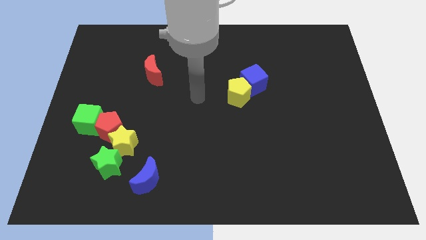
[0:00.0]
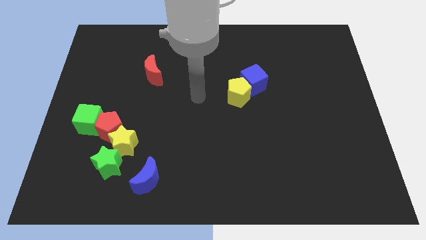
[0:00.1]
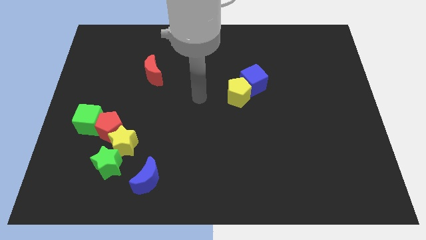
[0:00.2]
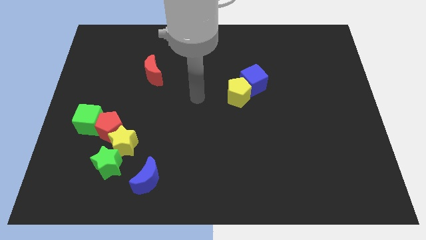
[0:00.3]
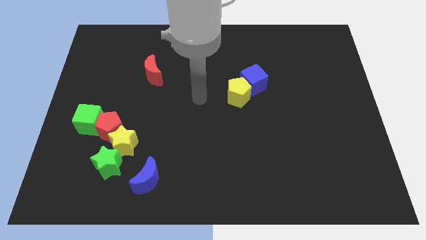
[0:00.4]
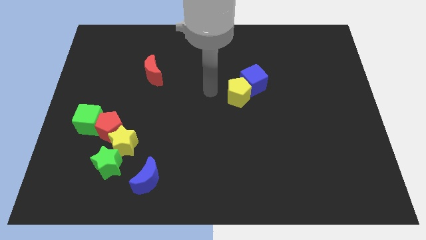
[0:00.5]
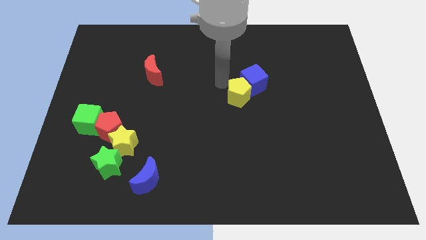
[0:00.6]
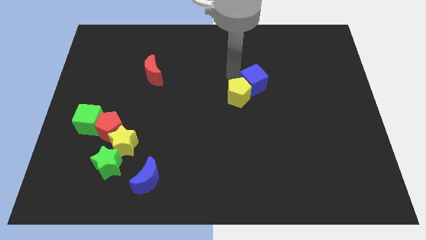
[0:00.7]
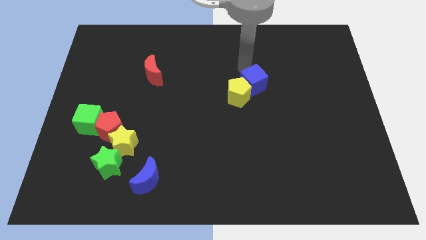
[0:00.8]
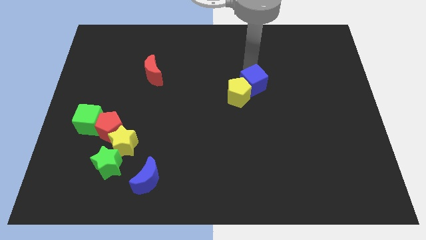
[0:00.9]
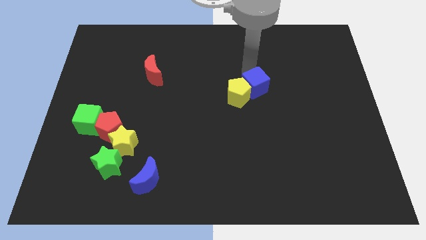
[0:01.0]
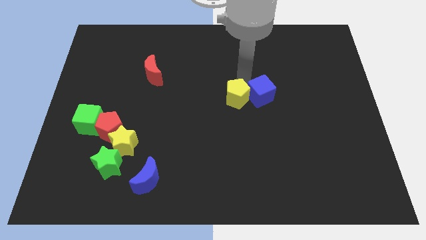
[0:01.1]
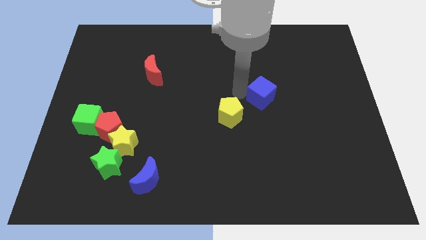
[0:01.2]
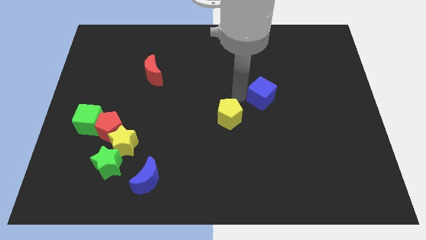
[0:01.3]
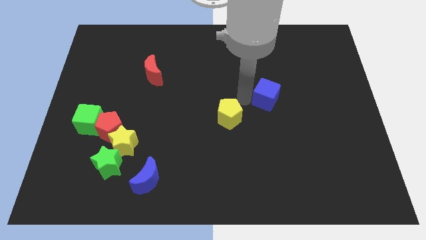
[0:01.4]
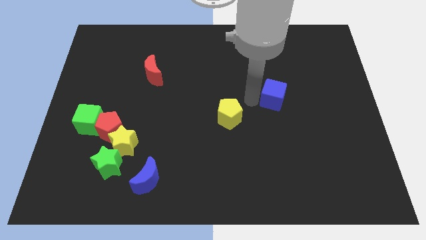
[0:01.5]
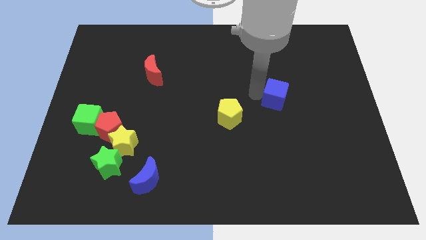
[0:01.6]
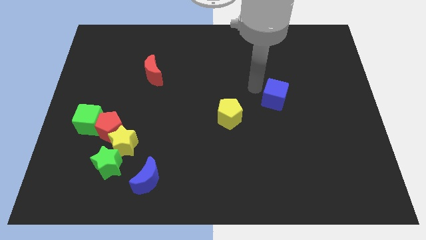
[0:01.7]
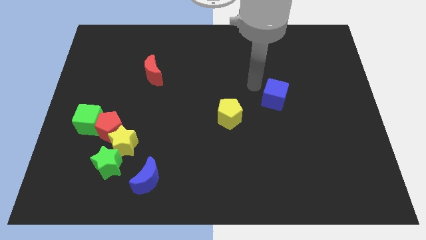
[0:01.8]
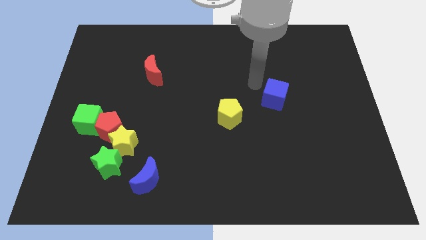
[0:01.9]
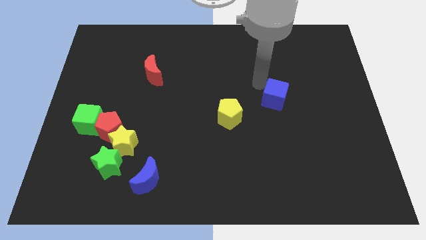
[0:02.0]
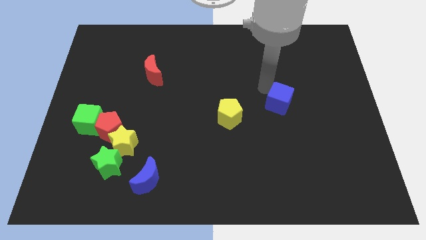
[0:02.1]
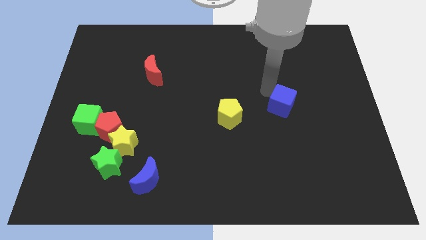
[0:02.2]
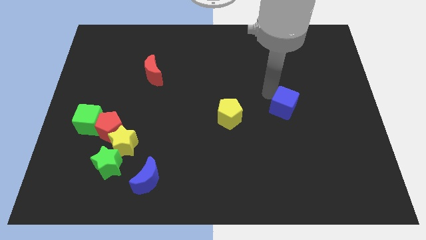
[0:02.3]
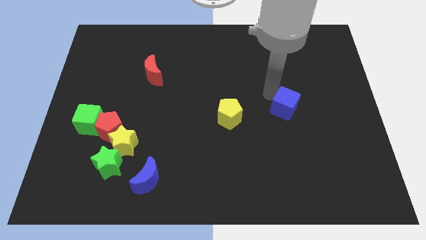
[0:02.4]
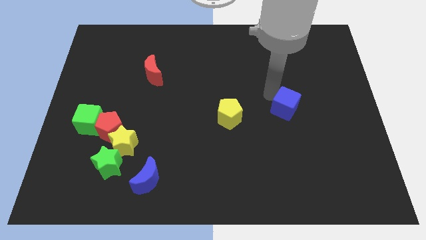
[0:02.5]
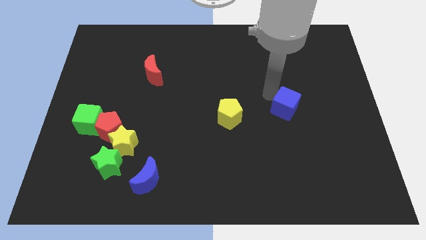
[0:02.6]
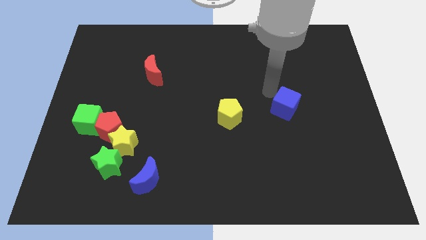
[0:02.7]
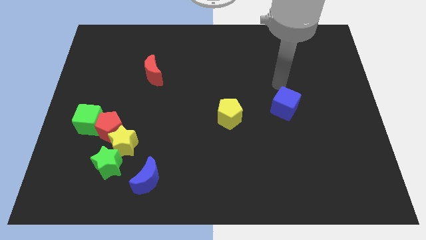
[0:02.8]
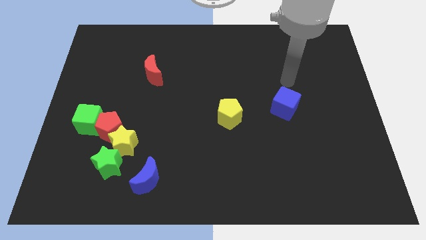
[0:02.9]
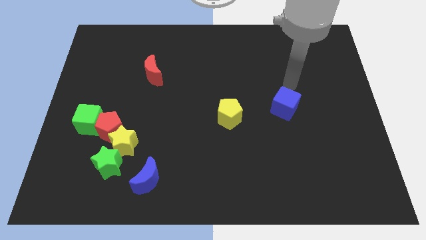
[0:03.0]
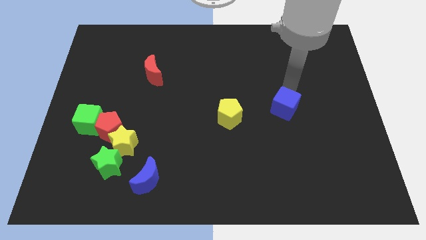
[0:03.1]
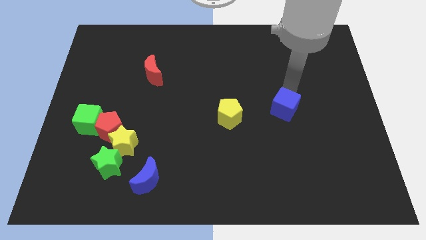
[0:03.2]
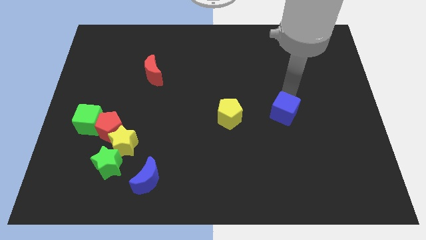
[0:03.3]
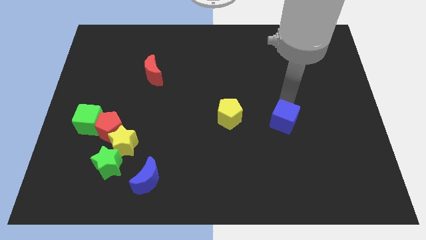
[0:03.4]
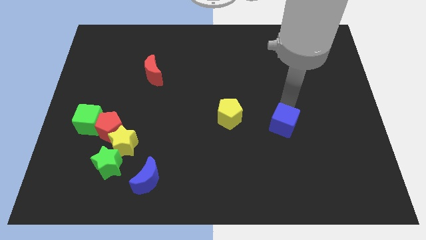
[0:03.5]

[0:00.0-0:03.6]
move the blue cube to the bottom of the board

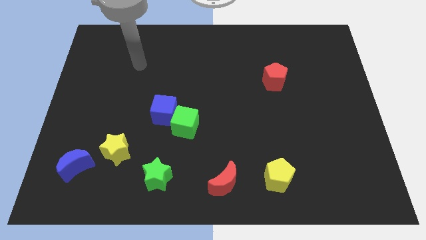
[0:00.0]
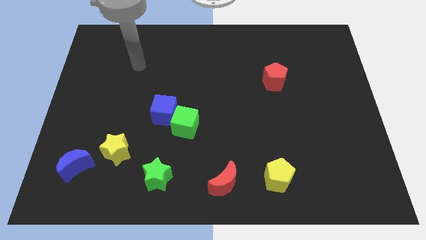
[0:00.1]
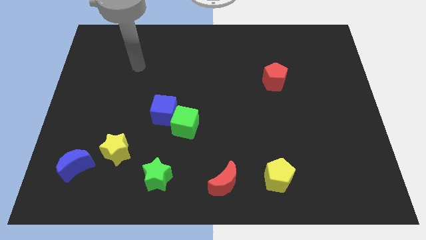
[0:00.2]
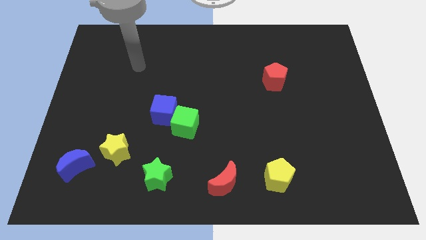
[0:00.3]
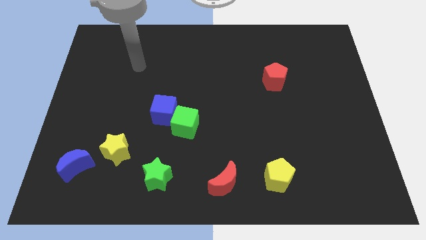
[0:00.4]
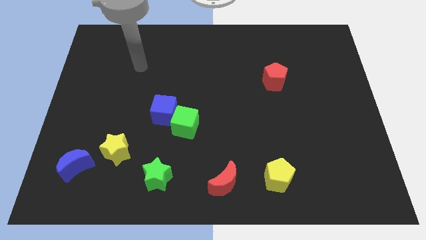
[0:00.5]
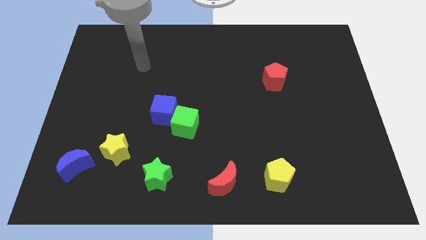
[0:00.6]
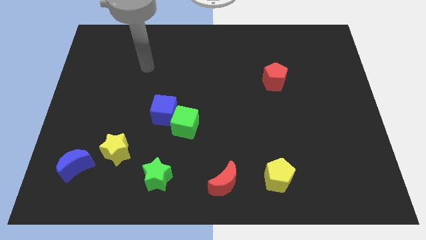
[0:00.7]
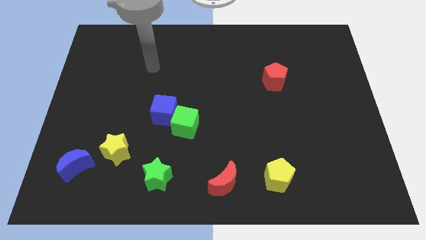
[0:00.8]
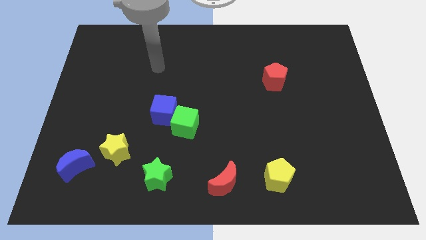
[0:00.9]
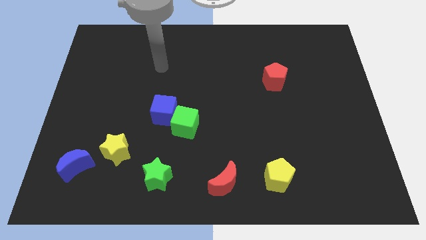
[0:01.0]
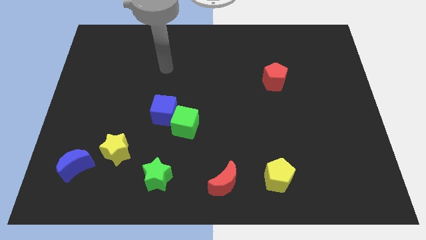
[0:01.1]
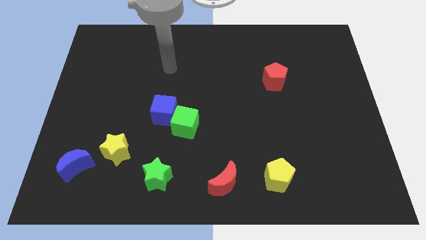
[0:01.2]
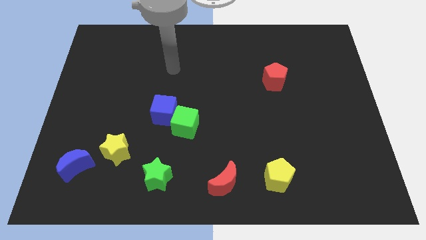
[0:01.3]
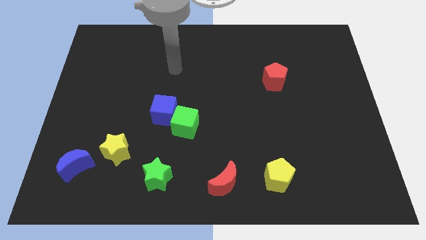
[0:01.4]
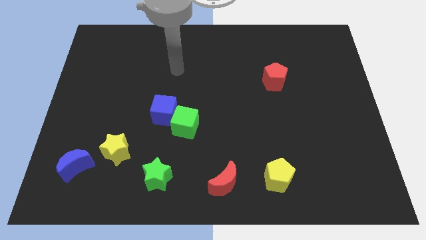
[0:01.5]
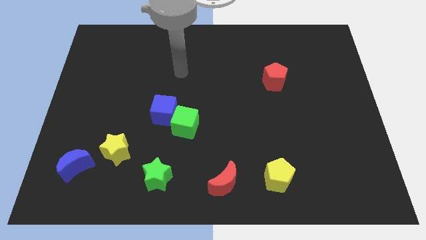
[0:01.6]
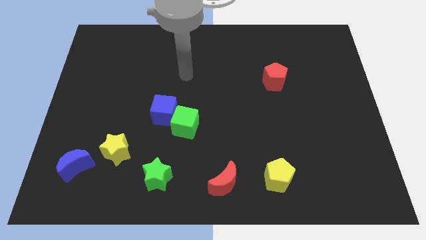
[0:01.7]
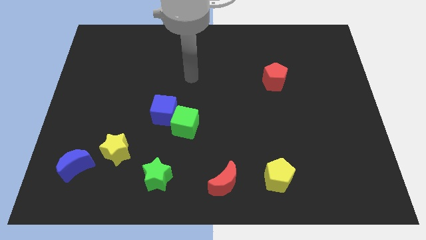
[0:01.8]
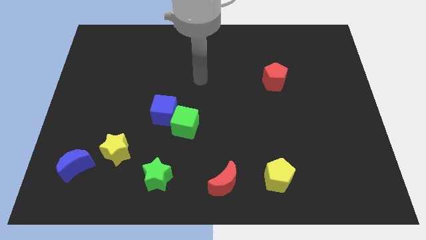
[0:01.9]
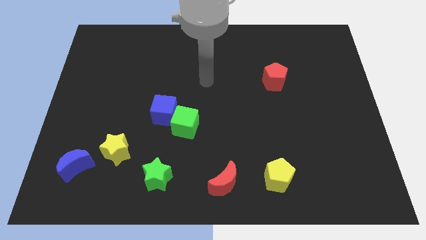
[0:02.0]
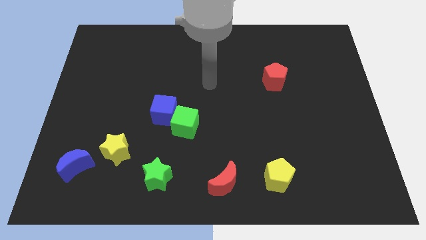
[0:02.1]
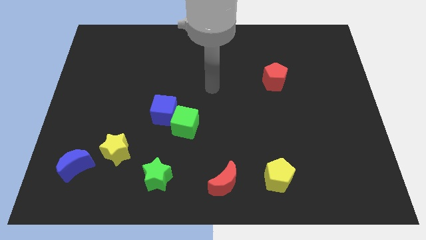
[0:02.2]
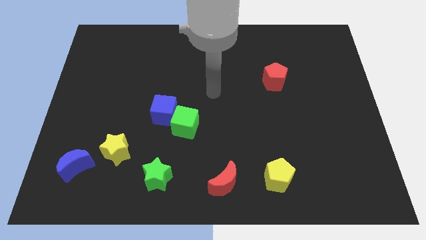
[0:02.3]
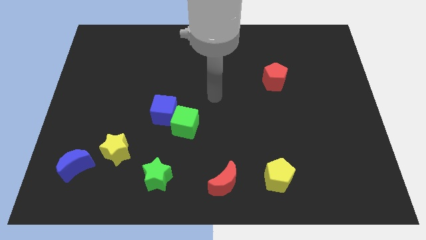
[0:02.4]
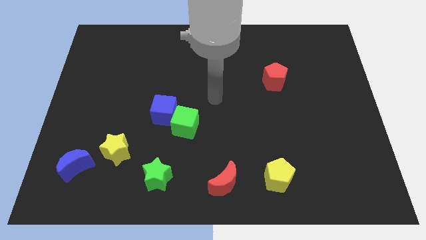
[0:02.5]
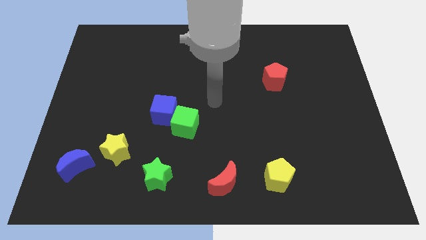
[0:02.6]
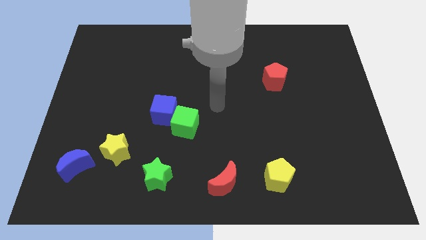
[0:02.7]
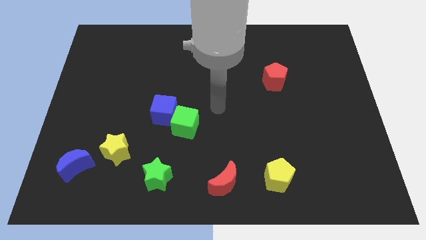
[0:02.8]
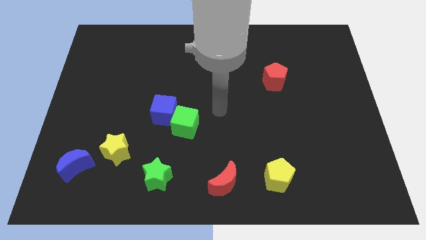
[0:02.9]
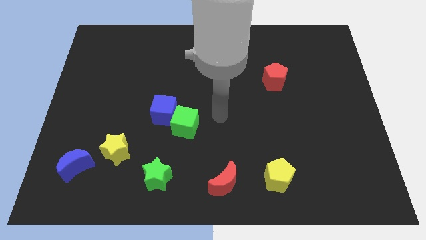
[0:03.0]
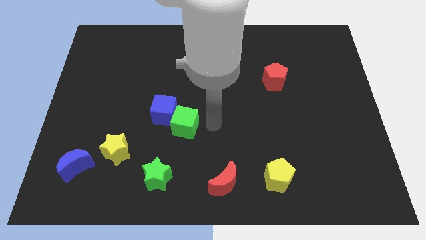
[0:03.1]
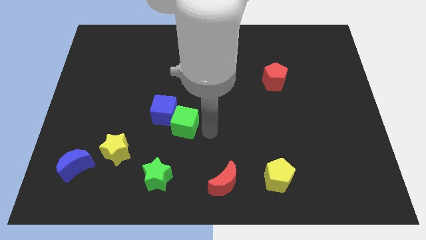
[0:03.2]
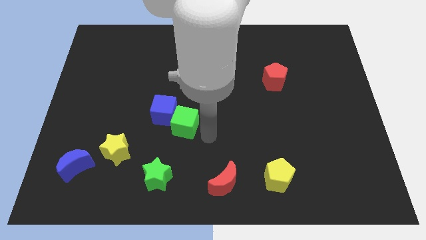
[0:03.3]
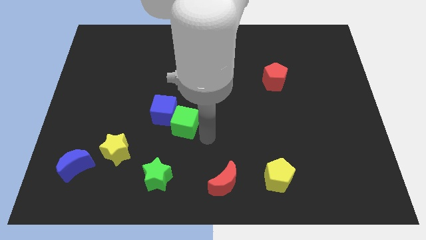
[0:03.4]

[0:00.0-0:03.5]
move your arm towards the green cube

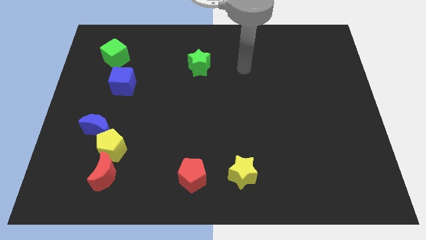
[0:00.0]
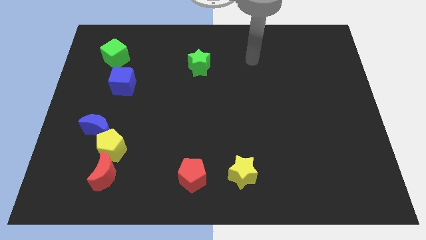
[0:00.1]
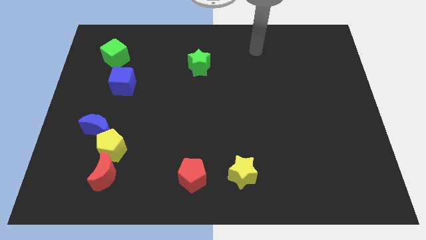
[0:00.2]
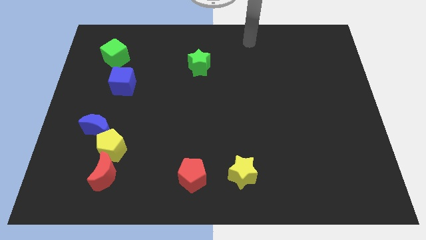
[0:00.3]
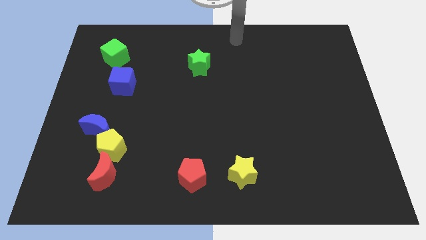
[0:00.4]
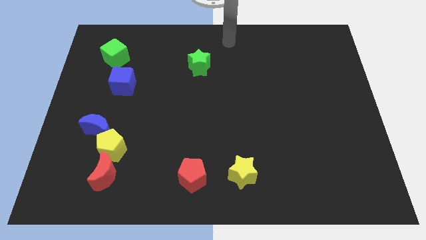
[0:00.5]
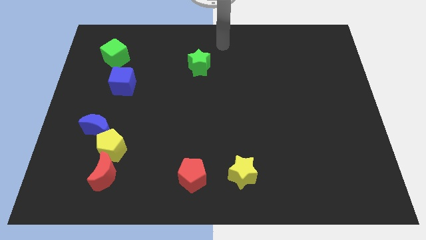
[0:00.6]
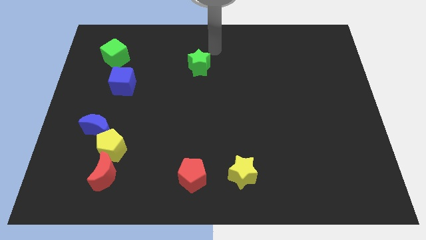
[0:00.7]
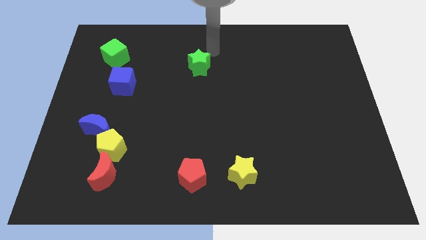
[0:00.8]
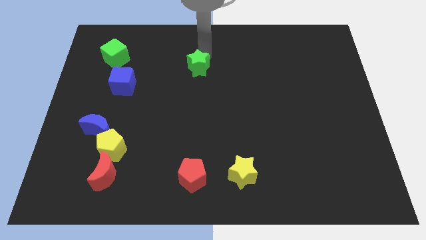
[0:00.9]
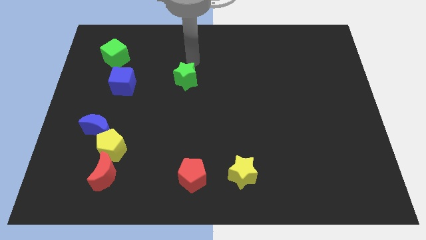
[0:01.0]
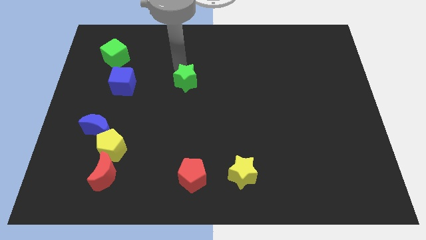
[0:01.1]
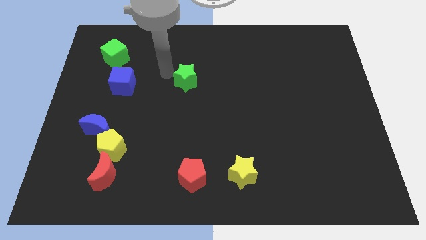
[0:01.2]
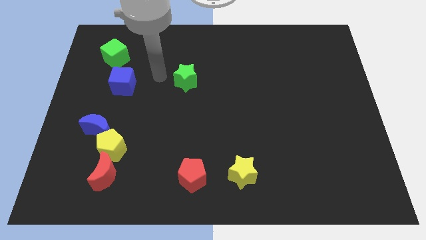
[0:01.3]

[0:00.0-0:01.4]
push the green star to the right of the blue cube

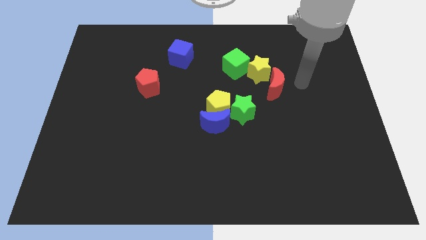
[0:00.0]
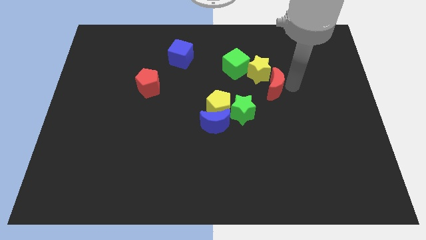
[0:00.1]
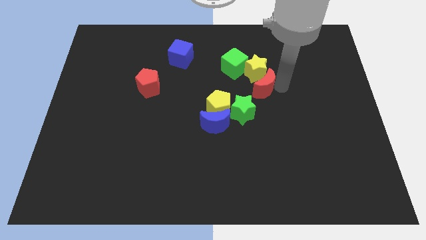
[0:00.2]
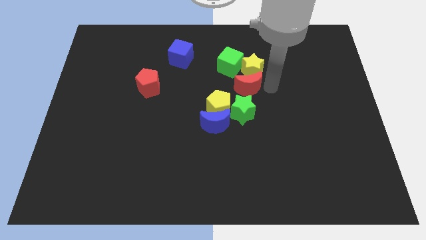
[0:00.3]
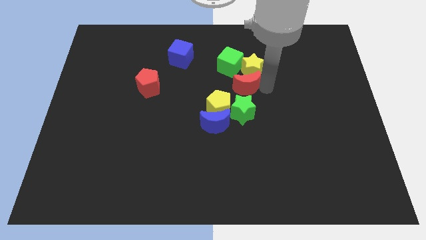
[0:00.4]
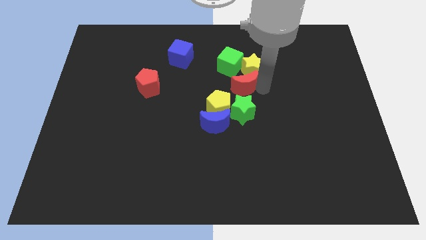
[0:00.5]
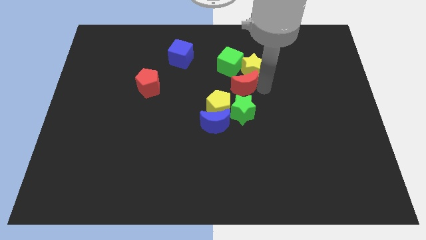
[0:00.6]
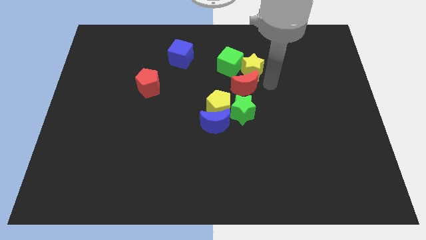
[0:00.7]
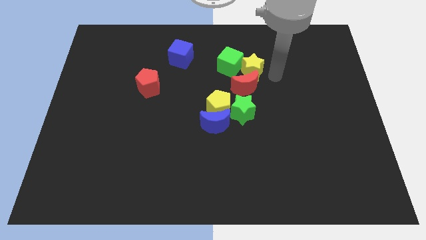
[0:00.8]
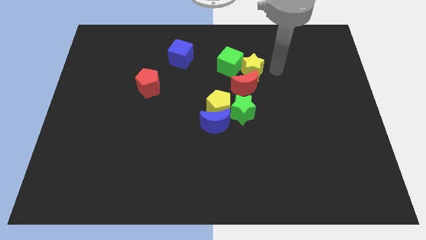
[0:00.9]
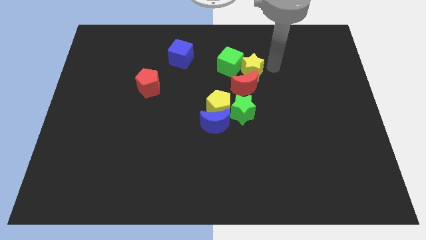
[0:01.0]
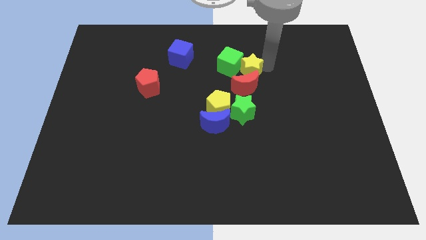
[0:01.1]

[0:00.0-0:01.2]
place the red moon in between the yellow star and the green star
